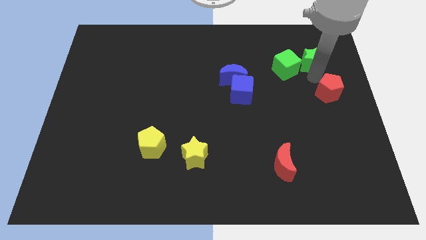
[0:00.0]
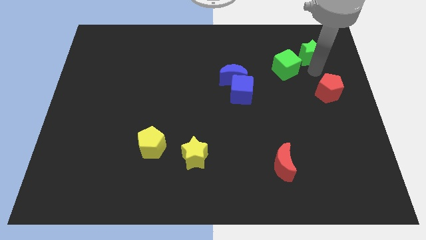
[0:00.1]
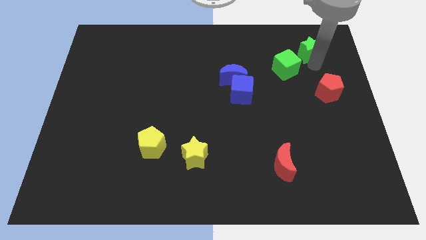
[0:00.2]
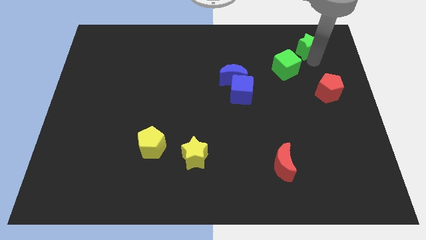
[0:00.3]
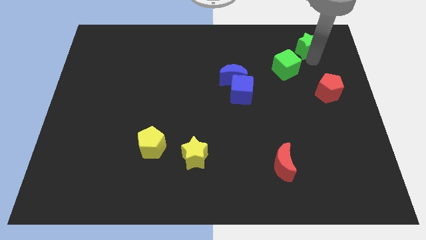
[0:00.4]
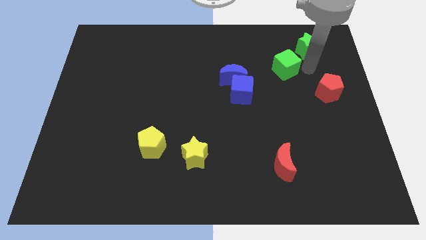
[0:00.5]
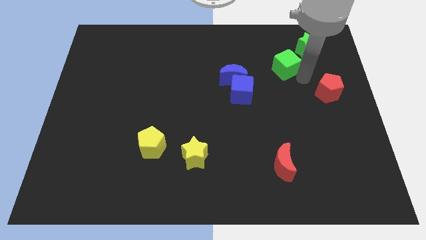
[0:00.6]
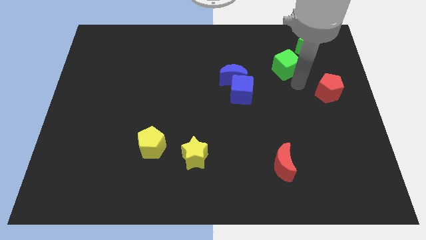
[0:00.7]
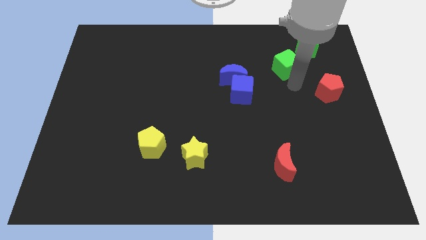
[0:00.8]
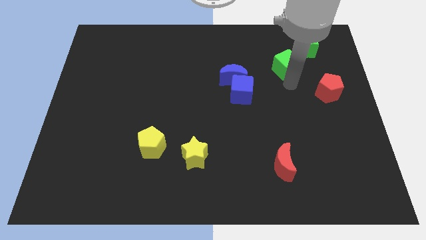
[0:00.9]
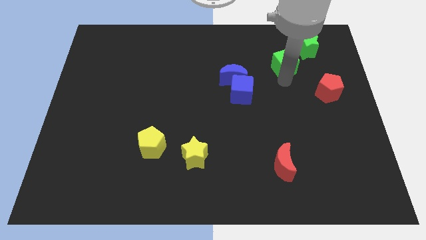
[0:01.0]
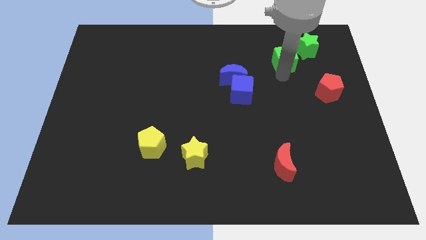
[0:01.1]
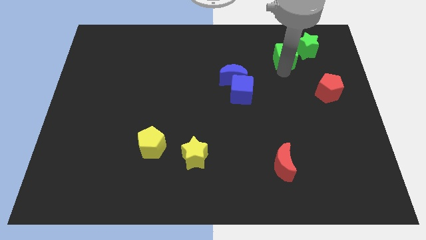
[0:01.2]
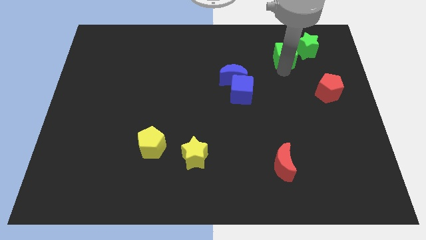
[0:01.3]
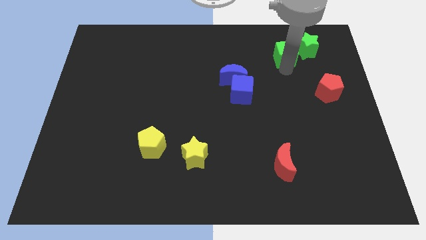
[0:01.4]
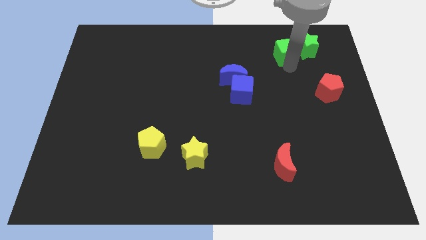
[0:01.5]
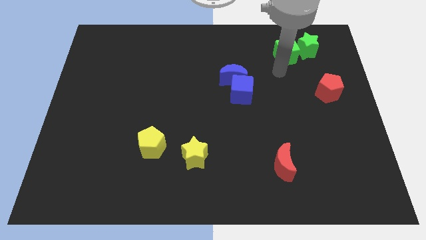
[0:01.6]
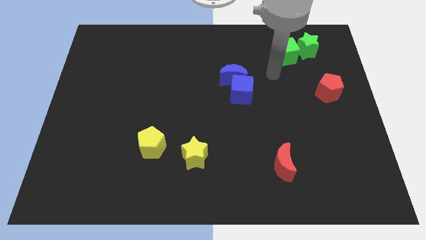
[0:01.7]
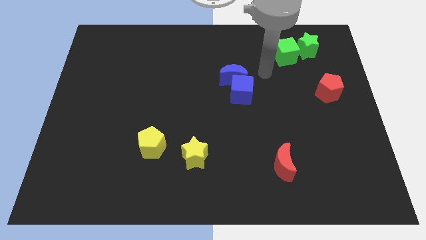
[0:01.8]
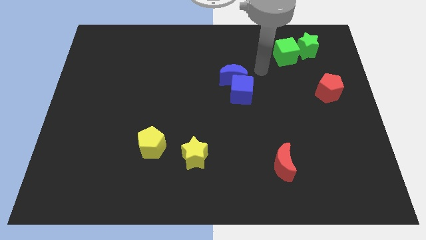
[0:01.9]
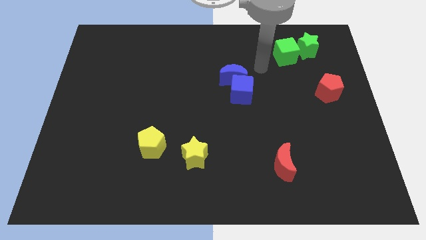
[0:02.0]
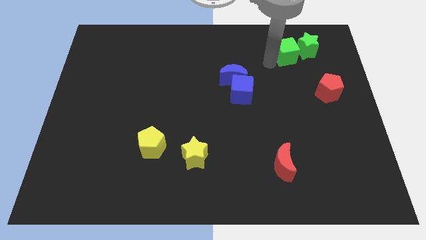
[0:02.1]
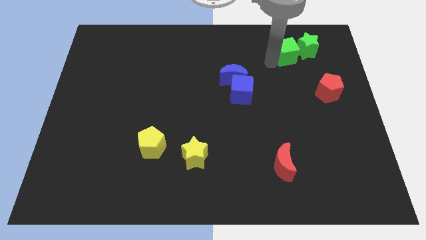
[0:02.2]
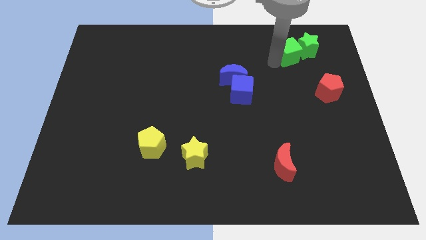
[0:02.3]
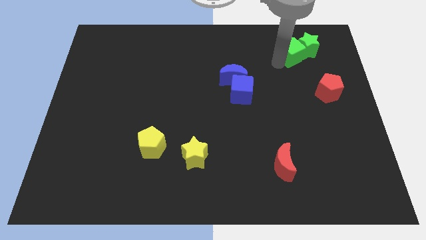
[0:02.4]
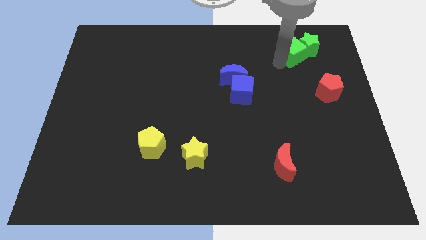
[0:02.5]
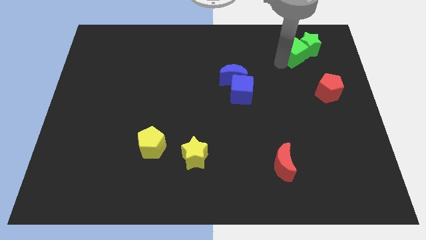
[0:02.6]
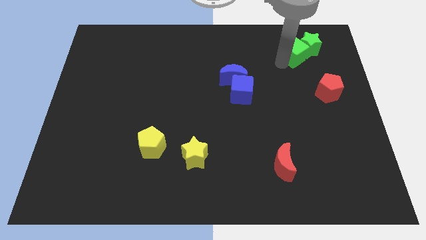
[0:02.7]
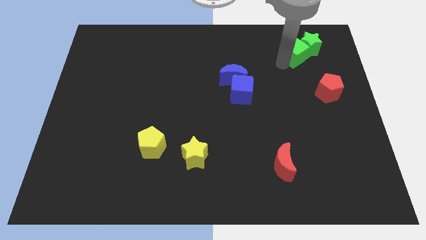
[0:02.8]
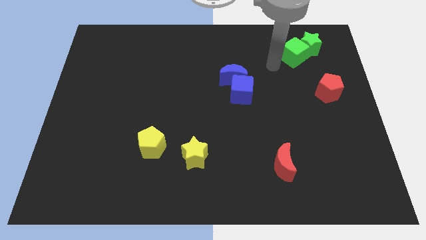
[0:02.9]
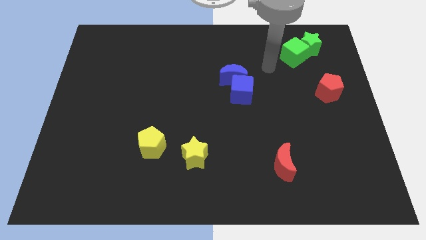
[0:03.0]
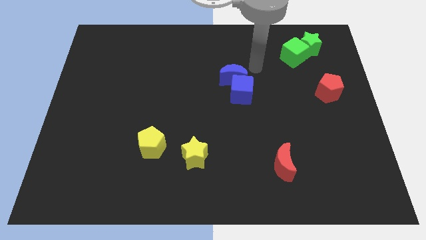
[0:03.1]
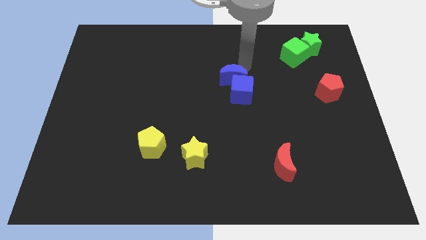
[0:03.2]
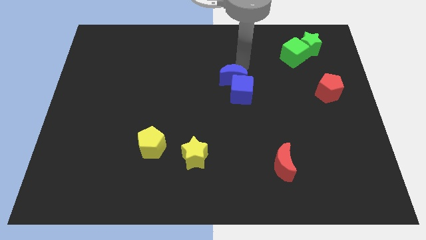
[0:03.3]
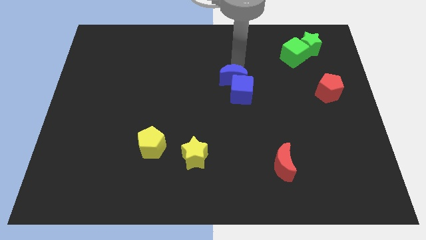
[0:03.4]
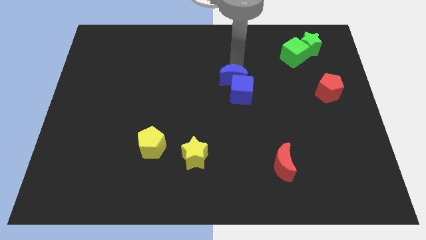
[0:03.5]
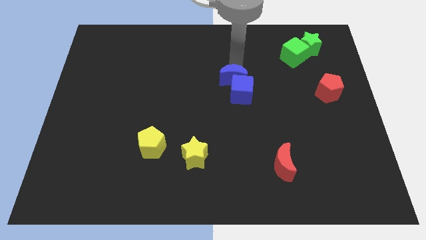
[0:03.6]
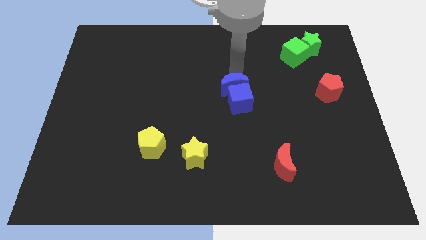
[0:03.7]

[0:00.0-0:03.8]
move the green star with the help of green cube

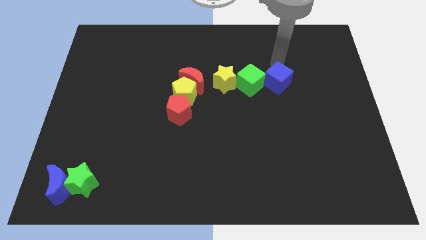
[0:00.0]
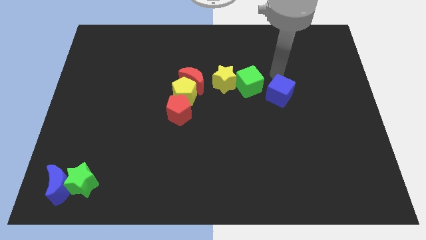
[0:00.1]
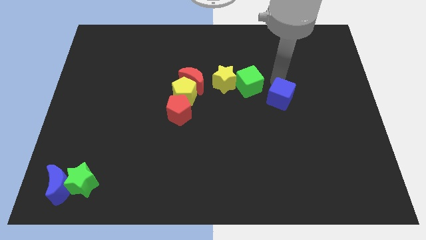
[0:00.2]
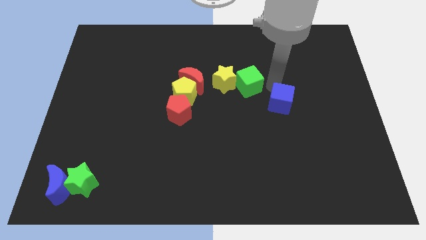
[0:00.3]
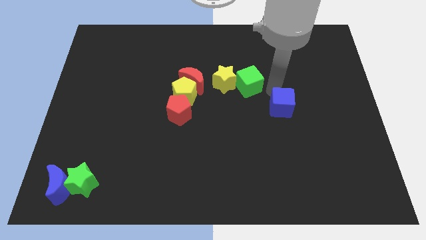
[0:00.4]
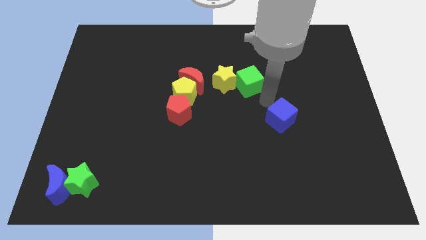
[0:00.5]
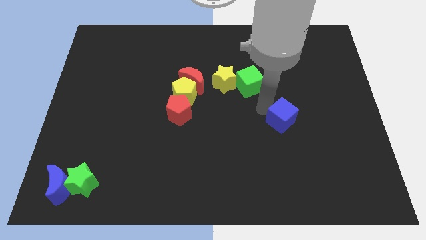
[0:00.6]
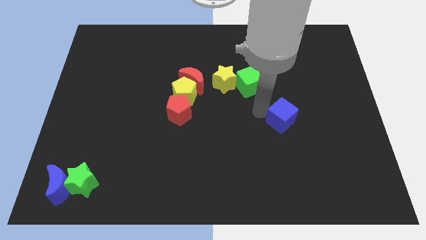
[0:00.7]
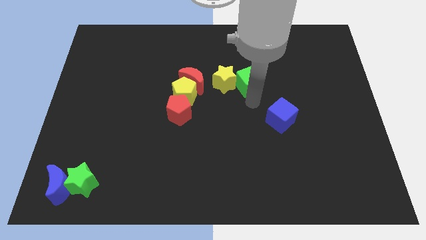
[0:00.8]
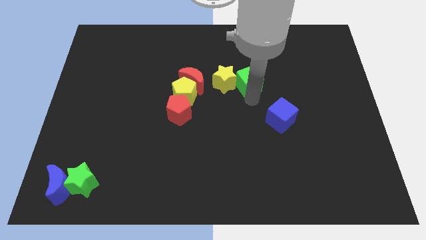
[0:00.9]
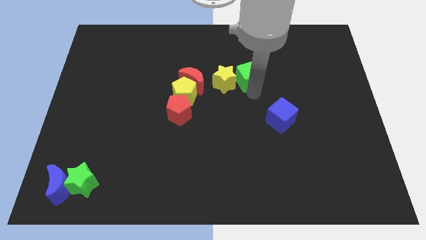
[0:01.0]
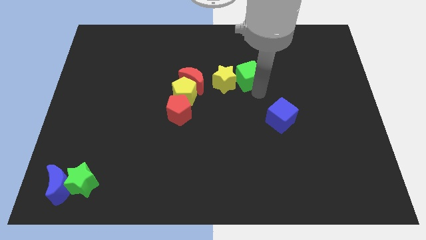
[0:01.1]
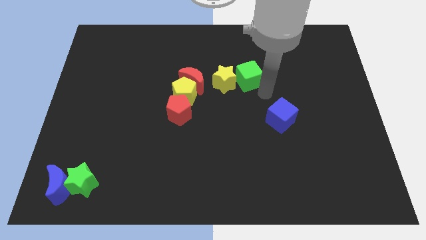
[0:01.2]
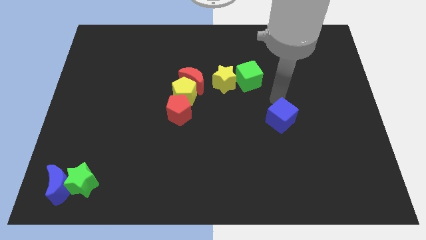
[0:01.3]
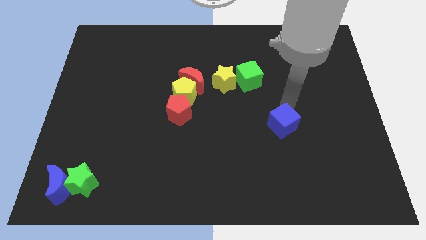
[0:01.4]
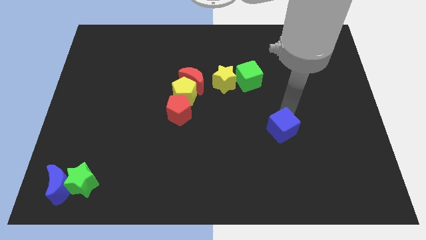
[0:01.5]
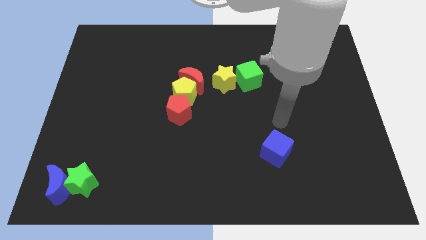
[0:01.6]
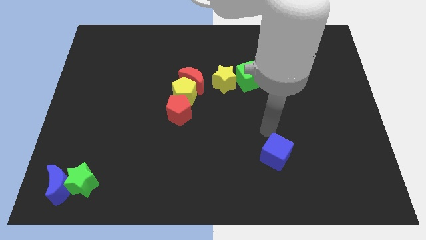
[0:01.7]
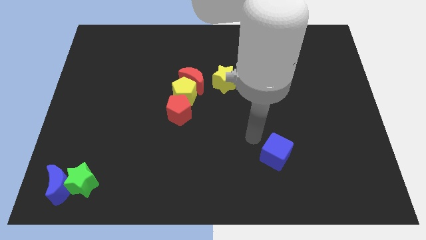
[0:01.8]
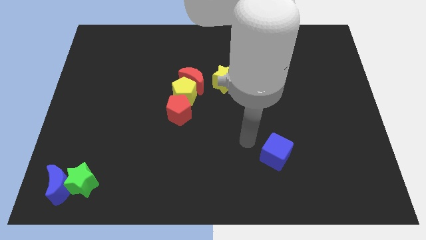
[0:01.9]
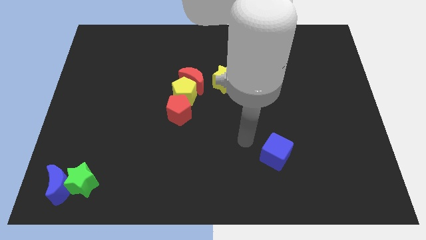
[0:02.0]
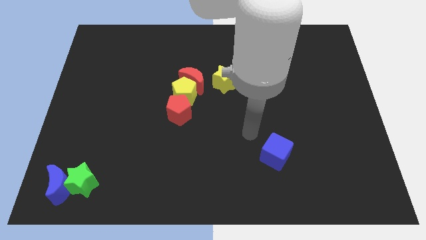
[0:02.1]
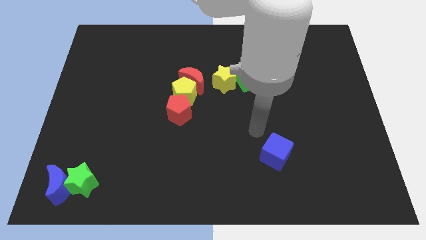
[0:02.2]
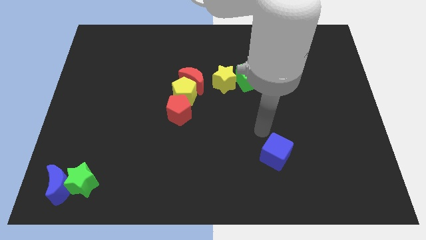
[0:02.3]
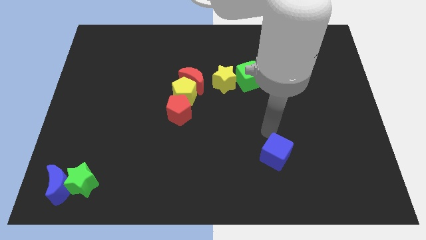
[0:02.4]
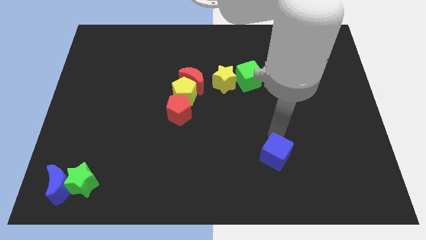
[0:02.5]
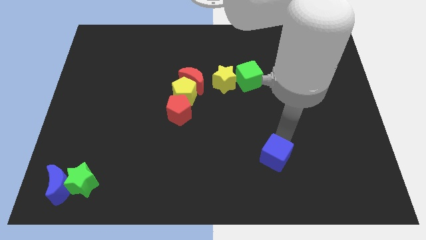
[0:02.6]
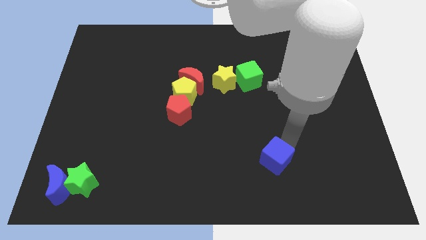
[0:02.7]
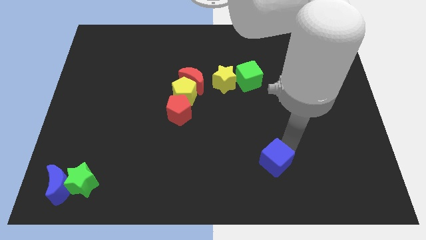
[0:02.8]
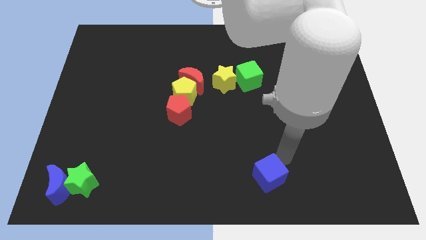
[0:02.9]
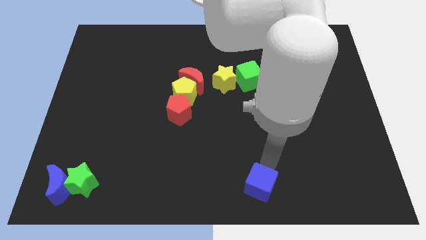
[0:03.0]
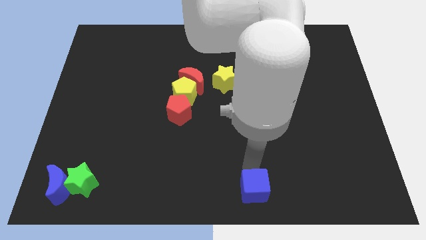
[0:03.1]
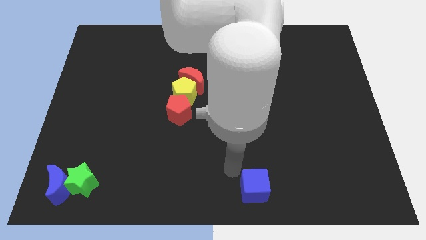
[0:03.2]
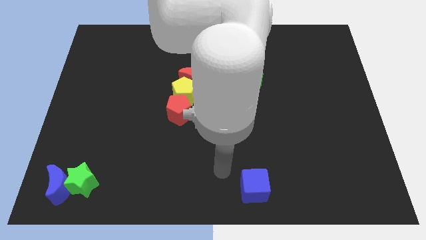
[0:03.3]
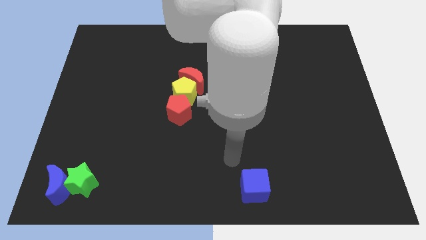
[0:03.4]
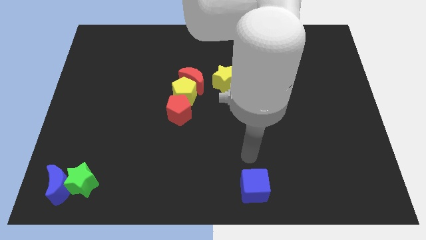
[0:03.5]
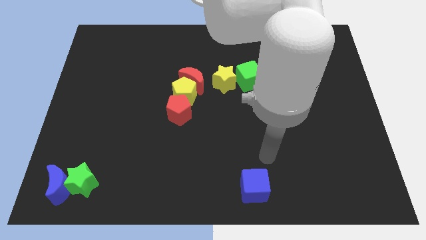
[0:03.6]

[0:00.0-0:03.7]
push the blue cube away from the green cube to the bottom of the board

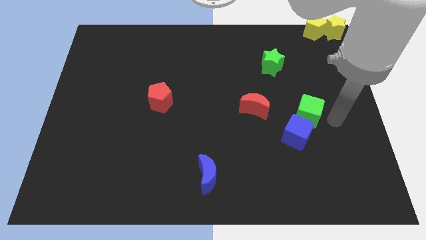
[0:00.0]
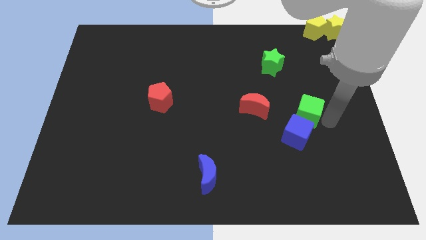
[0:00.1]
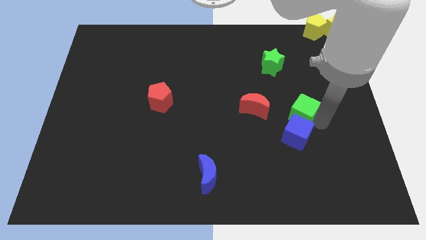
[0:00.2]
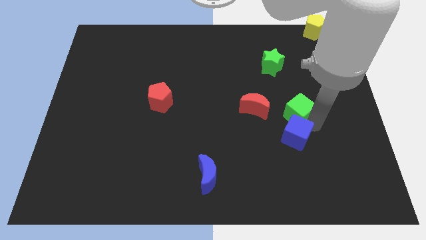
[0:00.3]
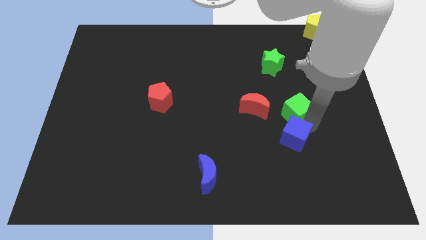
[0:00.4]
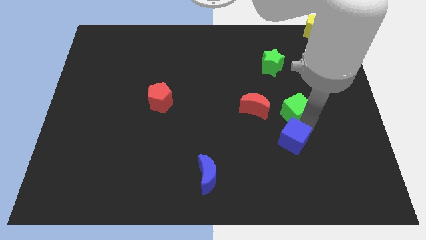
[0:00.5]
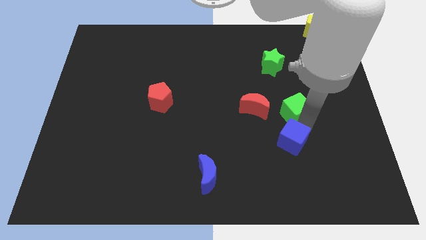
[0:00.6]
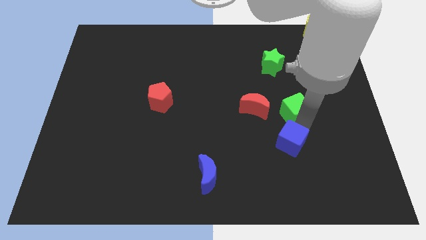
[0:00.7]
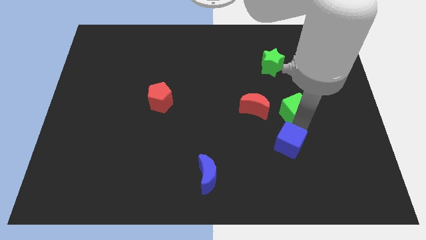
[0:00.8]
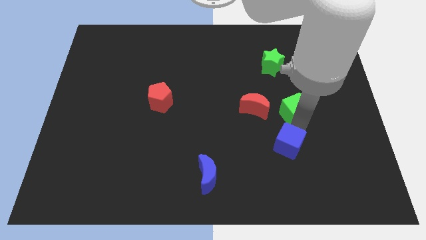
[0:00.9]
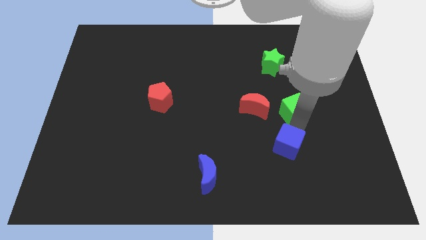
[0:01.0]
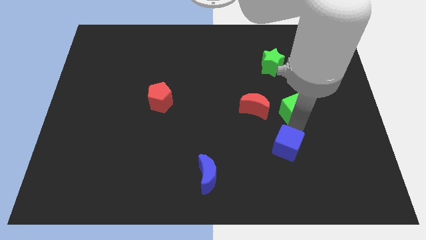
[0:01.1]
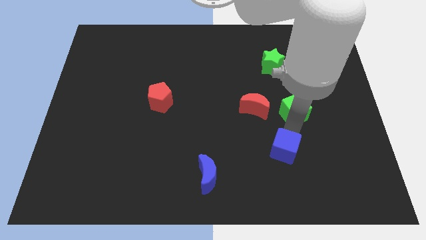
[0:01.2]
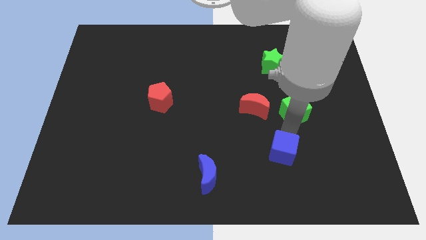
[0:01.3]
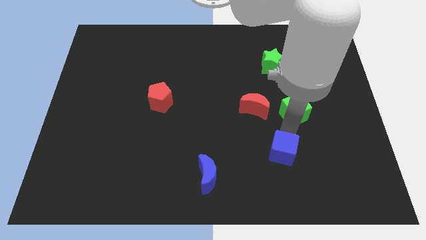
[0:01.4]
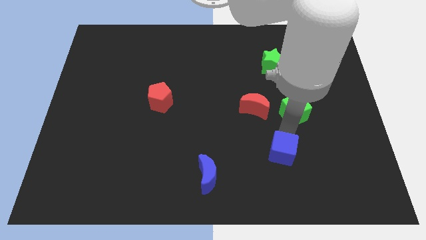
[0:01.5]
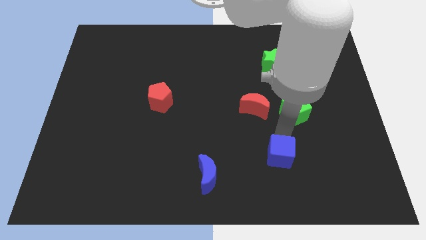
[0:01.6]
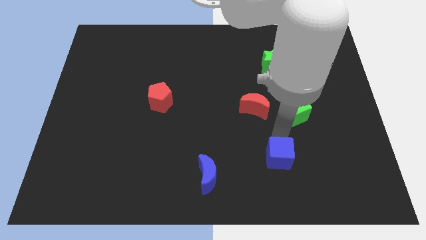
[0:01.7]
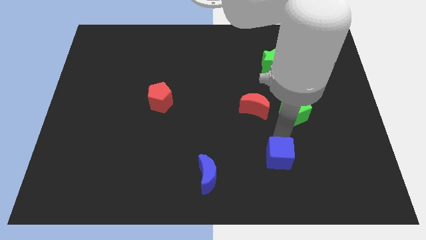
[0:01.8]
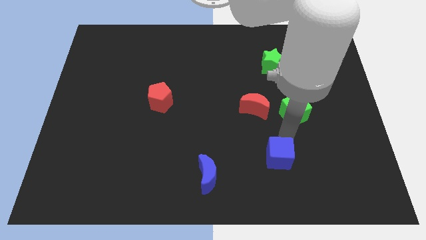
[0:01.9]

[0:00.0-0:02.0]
separate green cube and the blue cube
